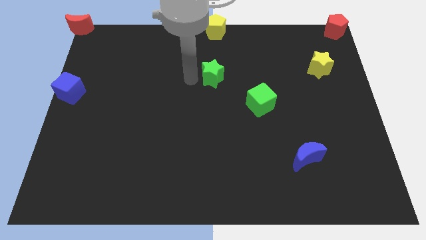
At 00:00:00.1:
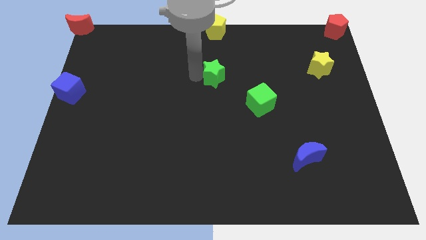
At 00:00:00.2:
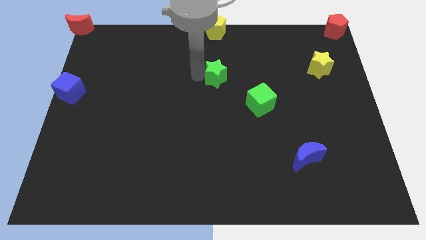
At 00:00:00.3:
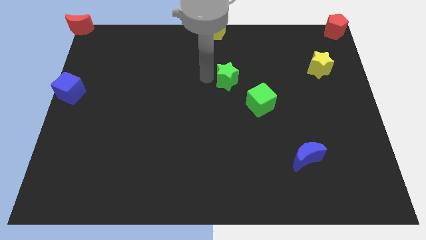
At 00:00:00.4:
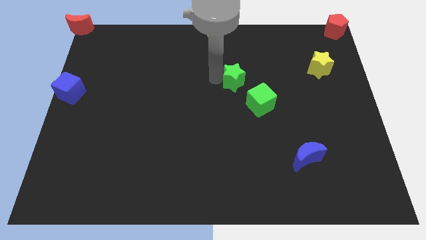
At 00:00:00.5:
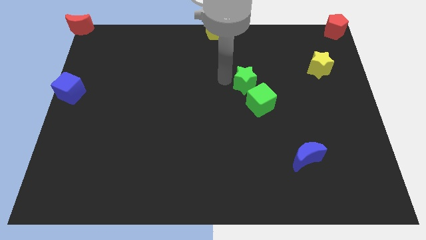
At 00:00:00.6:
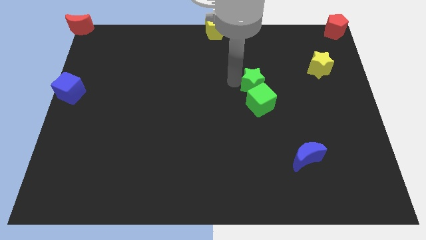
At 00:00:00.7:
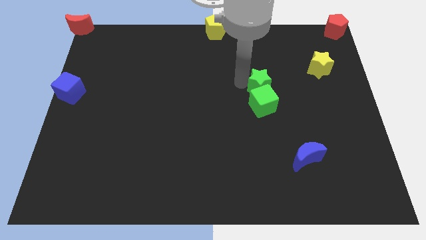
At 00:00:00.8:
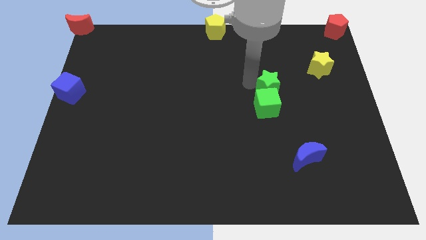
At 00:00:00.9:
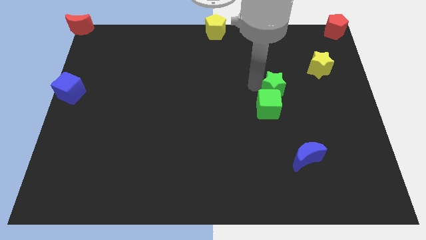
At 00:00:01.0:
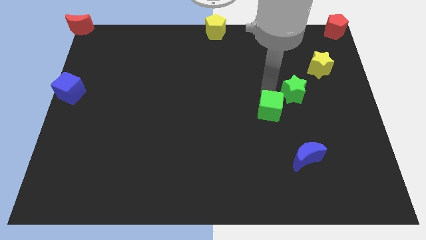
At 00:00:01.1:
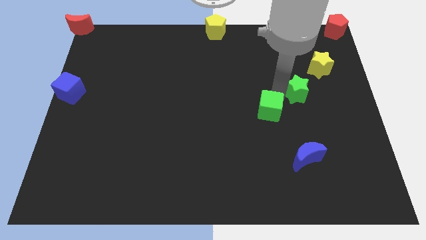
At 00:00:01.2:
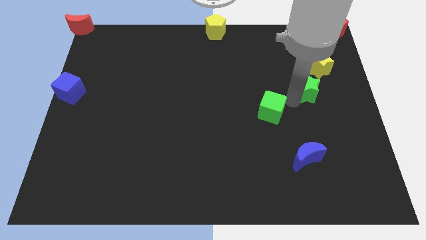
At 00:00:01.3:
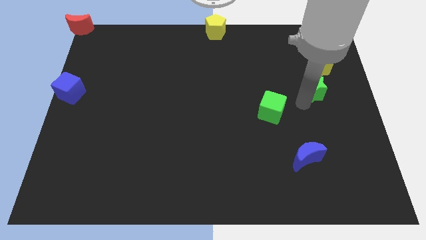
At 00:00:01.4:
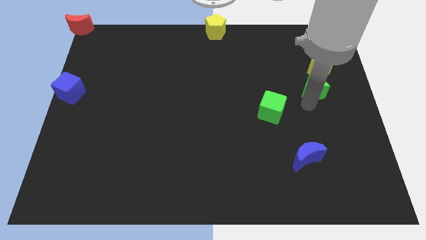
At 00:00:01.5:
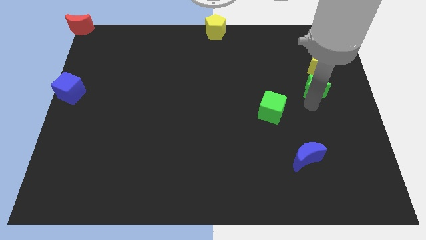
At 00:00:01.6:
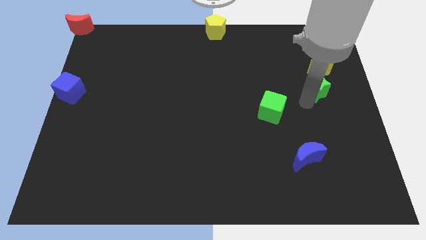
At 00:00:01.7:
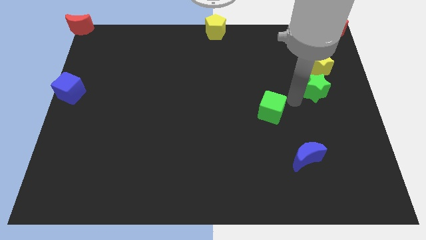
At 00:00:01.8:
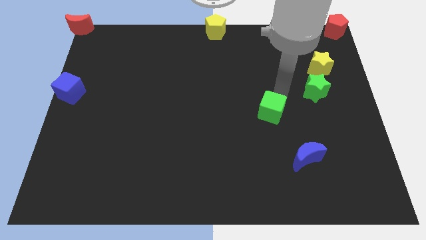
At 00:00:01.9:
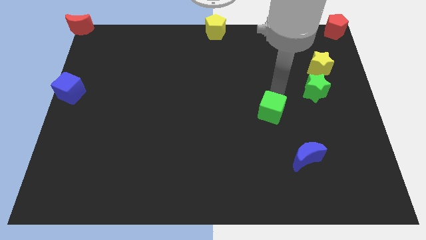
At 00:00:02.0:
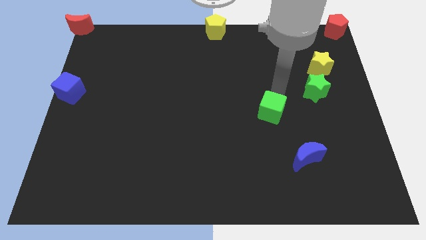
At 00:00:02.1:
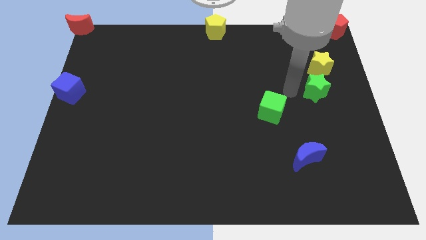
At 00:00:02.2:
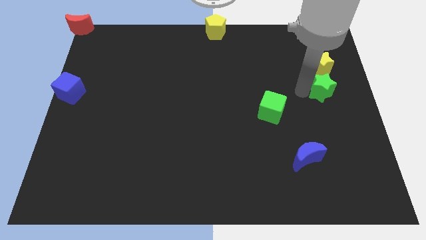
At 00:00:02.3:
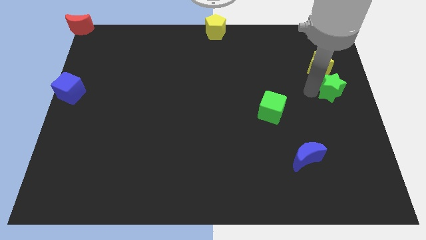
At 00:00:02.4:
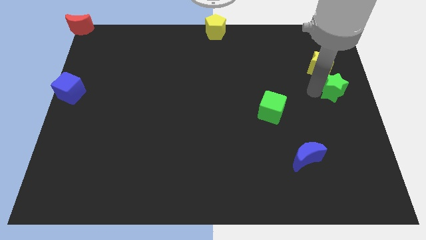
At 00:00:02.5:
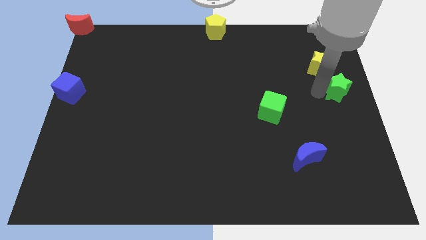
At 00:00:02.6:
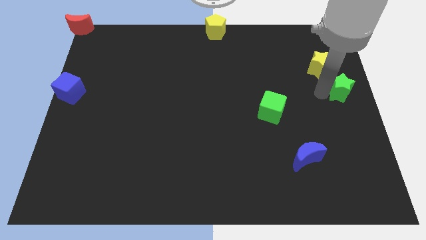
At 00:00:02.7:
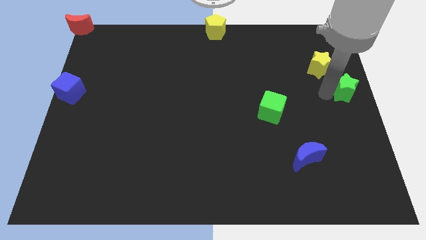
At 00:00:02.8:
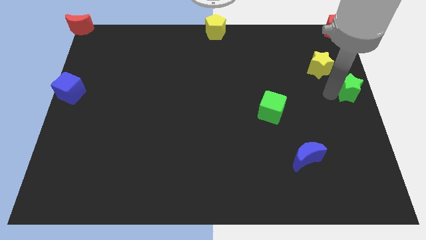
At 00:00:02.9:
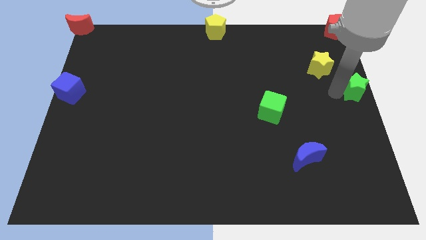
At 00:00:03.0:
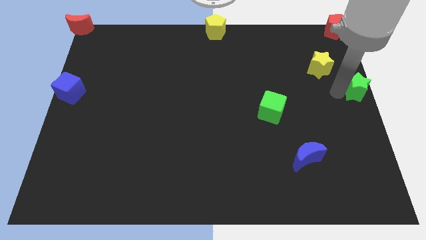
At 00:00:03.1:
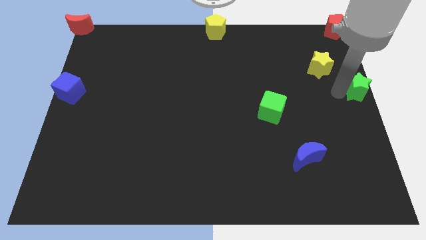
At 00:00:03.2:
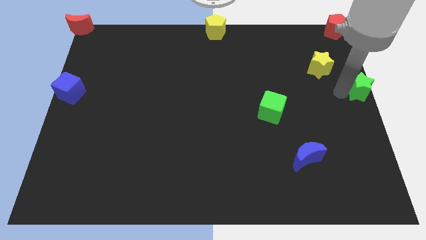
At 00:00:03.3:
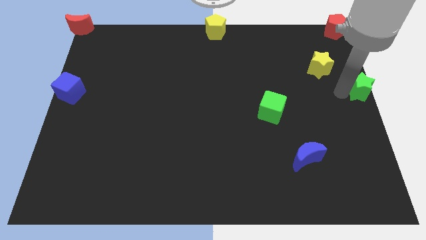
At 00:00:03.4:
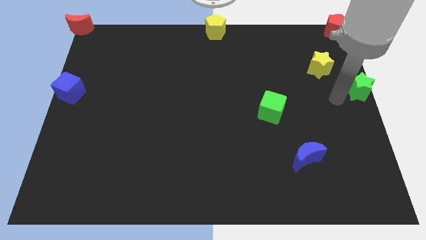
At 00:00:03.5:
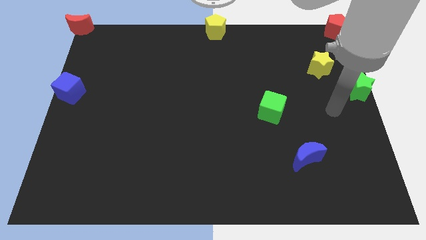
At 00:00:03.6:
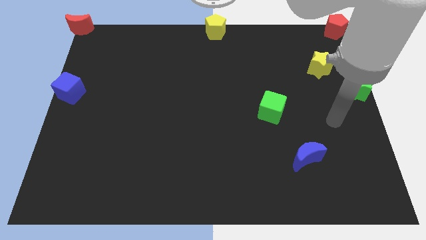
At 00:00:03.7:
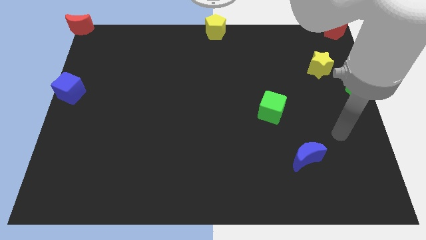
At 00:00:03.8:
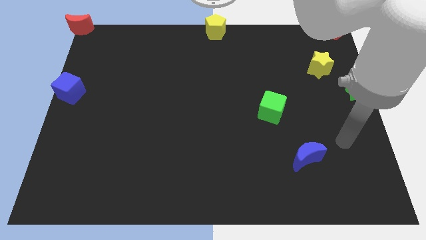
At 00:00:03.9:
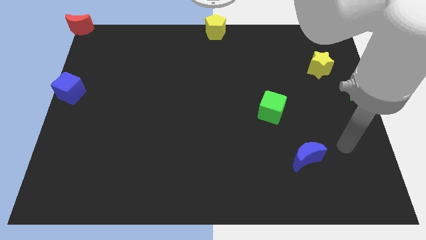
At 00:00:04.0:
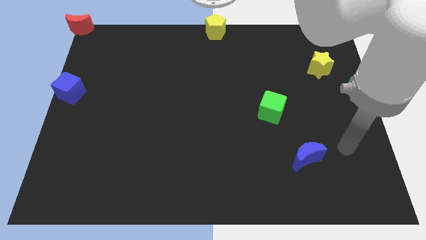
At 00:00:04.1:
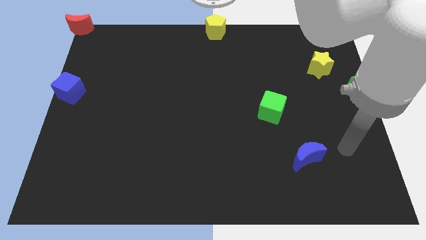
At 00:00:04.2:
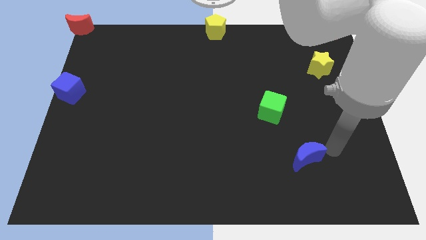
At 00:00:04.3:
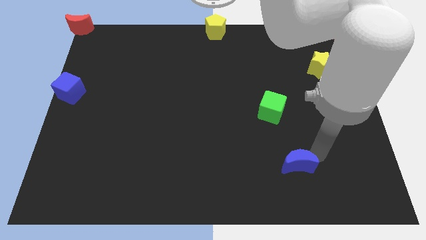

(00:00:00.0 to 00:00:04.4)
move green star towards the right center of the board

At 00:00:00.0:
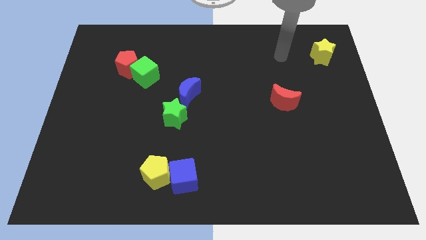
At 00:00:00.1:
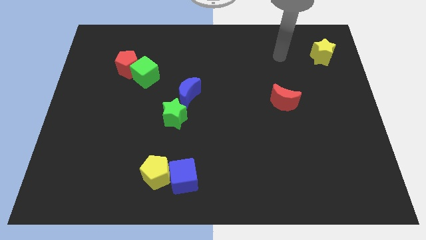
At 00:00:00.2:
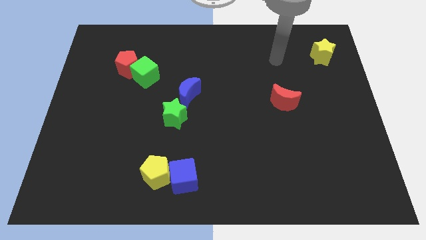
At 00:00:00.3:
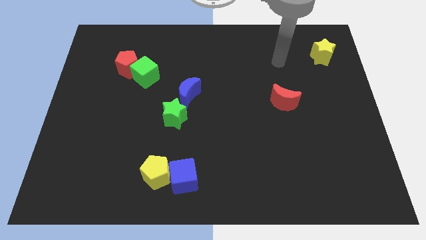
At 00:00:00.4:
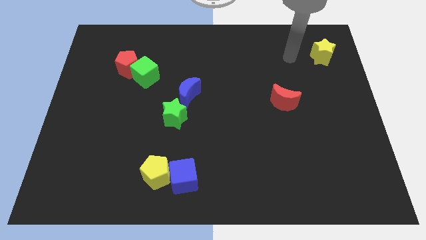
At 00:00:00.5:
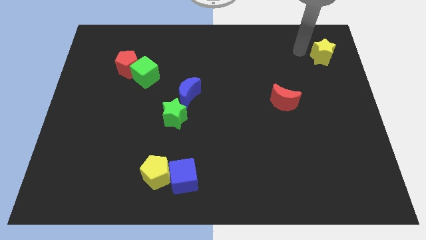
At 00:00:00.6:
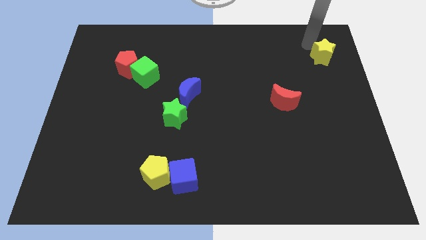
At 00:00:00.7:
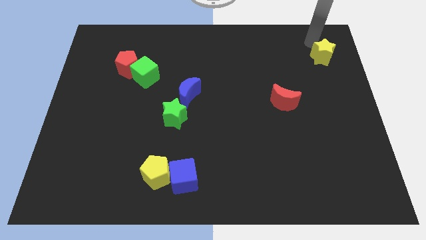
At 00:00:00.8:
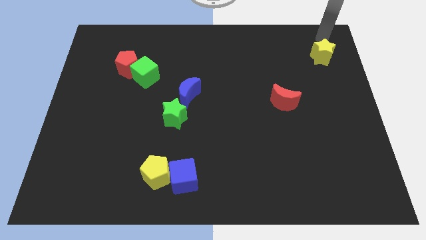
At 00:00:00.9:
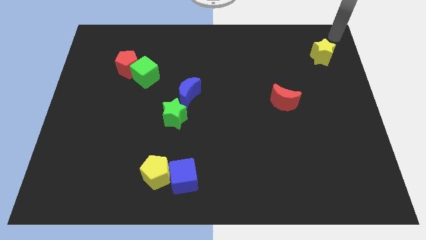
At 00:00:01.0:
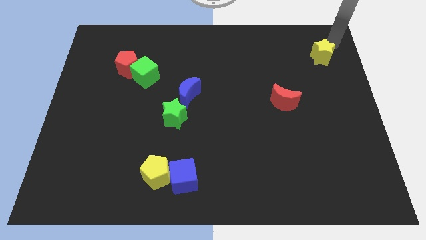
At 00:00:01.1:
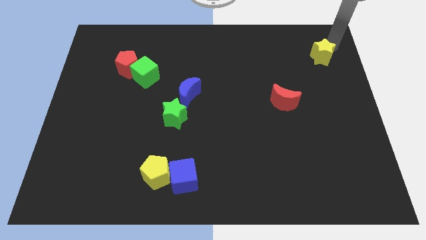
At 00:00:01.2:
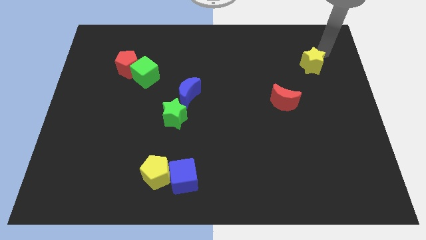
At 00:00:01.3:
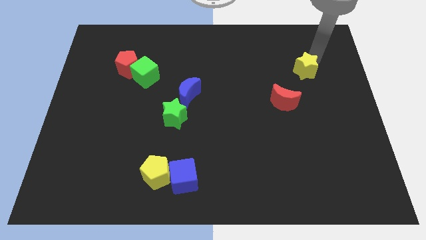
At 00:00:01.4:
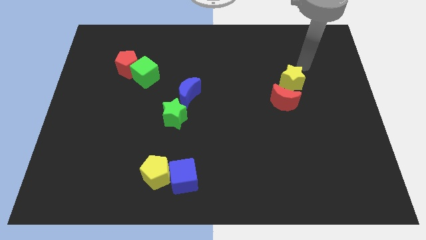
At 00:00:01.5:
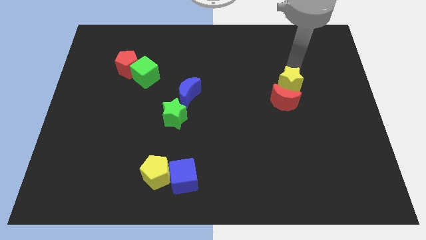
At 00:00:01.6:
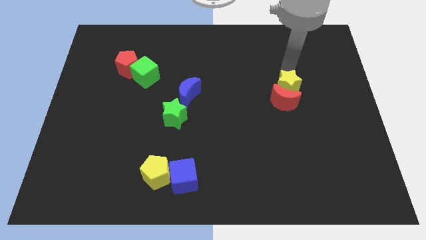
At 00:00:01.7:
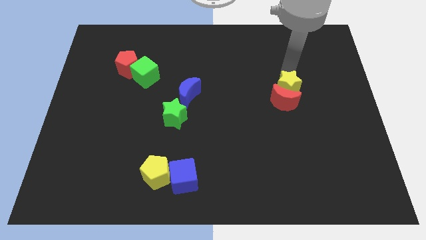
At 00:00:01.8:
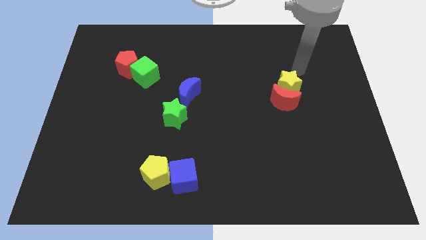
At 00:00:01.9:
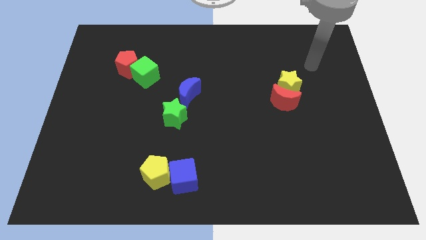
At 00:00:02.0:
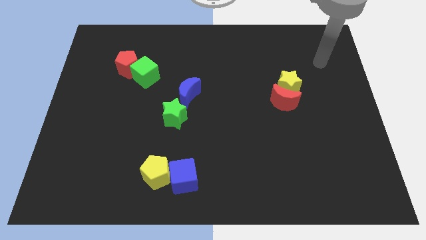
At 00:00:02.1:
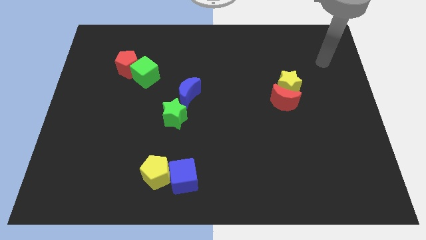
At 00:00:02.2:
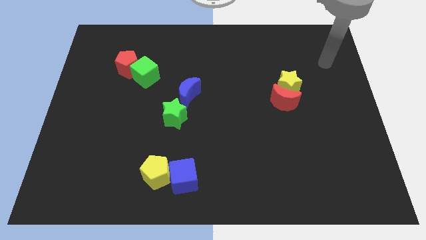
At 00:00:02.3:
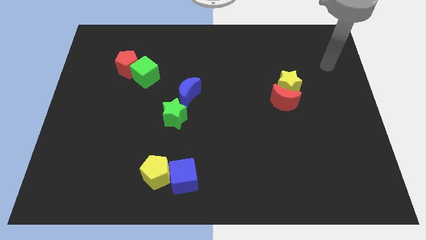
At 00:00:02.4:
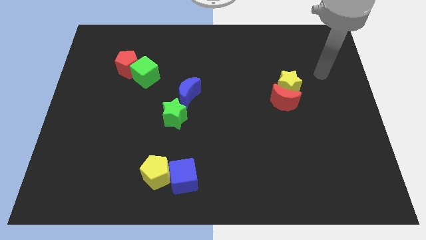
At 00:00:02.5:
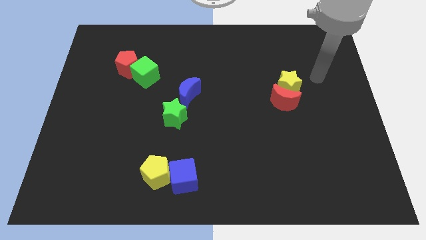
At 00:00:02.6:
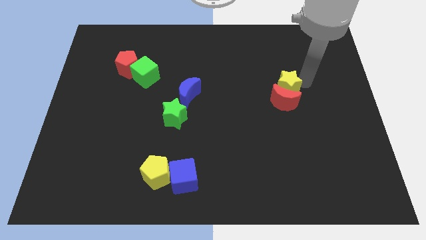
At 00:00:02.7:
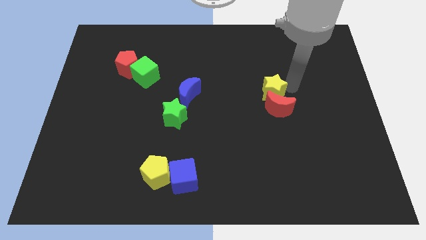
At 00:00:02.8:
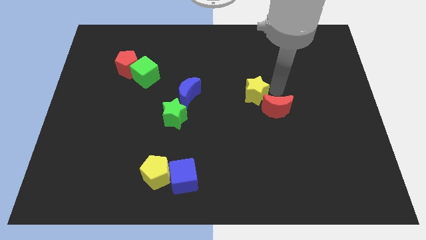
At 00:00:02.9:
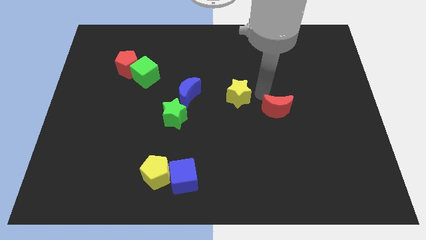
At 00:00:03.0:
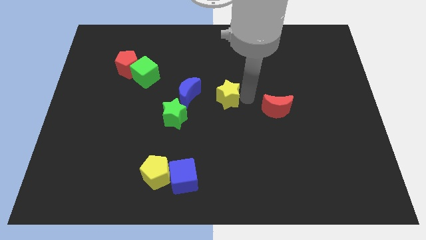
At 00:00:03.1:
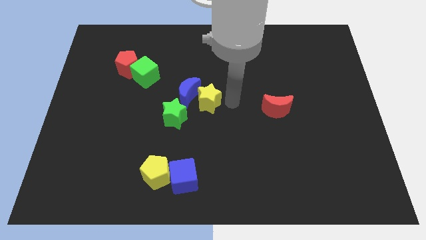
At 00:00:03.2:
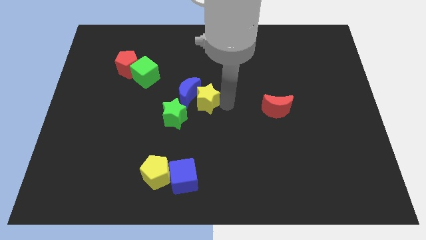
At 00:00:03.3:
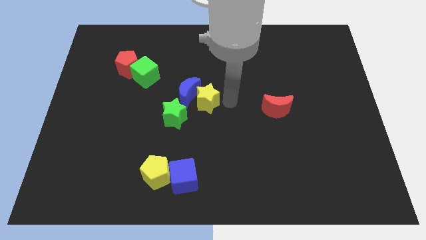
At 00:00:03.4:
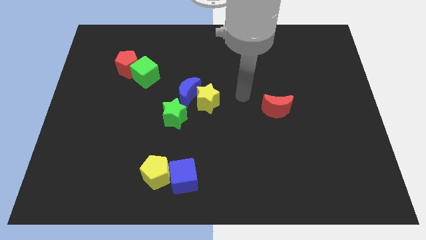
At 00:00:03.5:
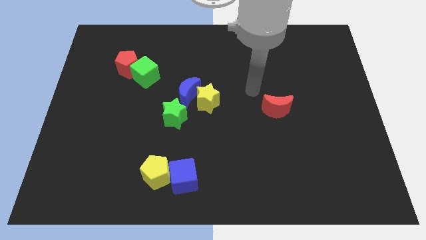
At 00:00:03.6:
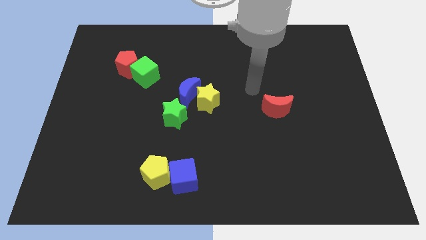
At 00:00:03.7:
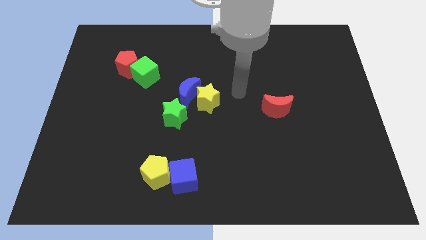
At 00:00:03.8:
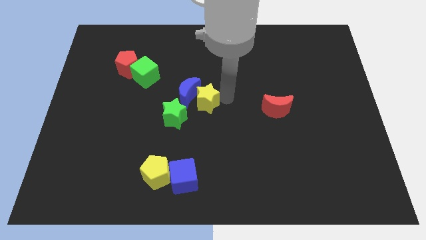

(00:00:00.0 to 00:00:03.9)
move the yellow star towards the blue crescent

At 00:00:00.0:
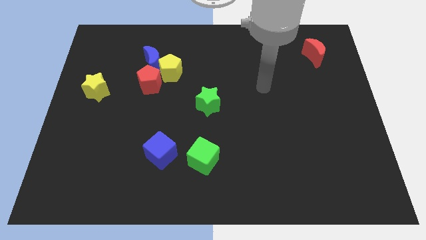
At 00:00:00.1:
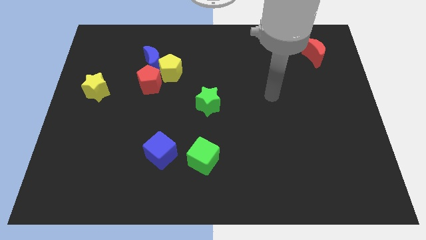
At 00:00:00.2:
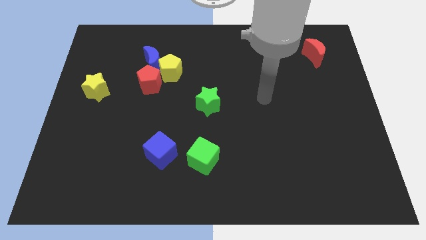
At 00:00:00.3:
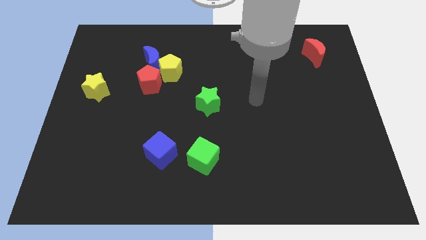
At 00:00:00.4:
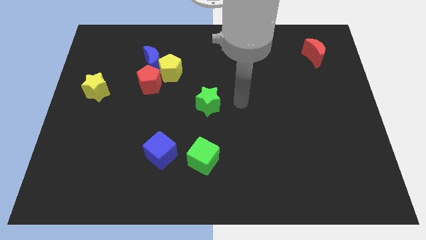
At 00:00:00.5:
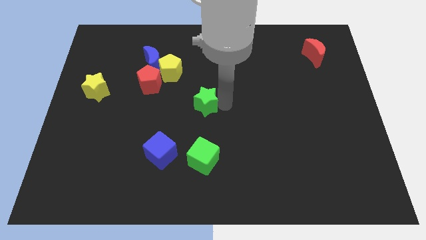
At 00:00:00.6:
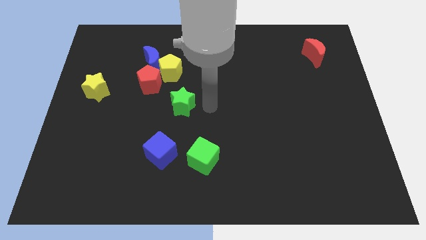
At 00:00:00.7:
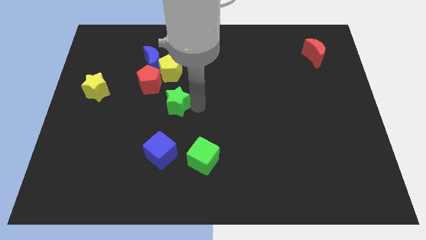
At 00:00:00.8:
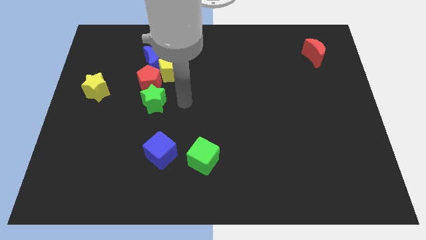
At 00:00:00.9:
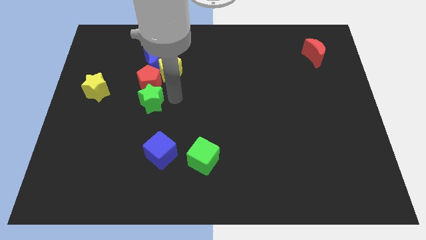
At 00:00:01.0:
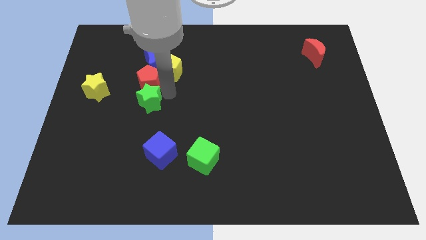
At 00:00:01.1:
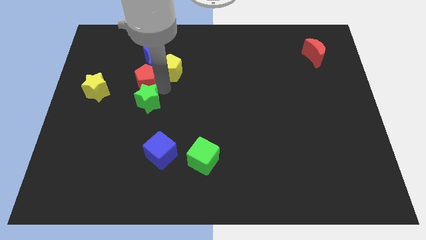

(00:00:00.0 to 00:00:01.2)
move the green star into the red pentagon
